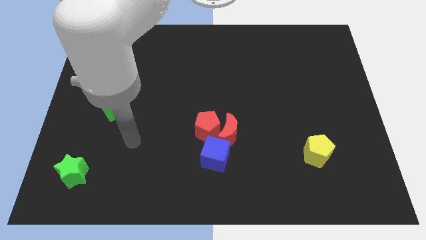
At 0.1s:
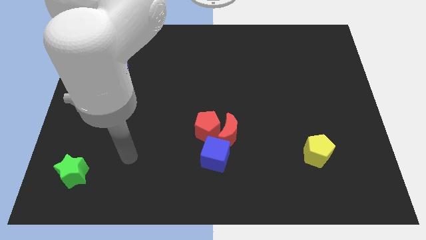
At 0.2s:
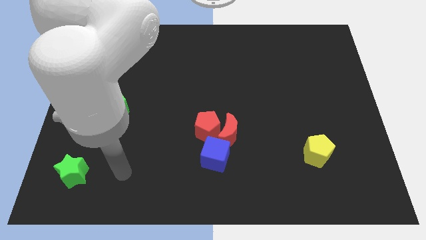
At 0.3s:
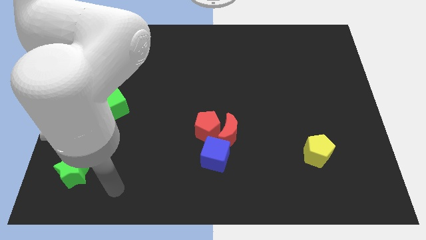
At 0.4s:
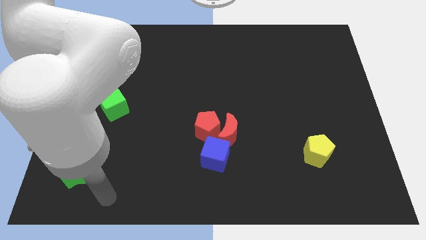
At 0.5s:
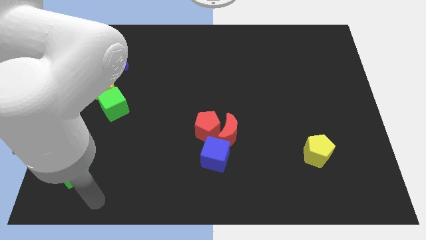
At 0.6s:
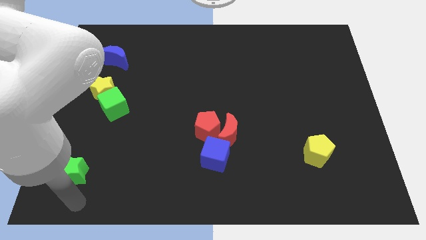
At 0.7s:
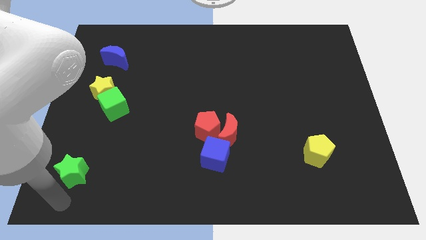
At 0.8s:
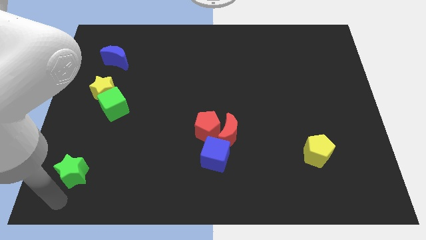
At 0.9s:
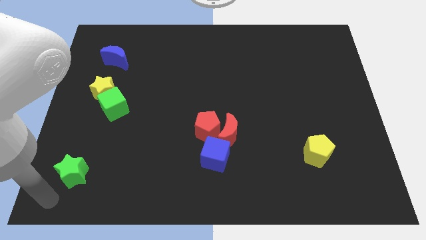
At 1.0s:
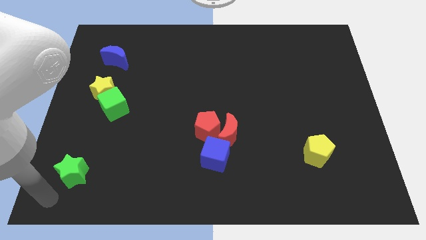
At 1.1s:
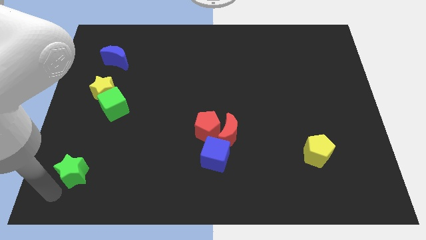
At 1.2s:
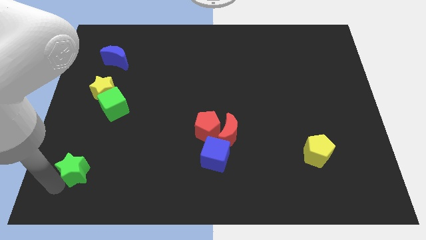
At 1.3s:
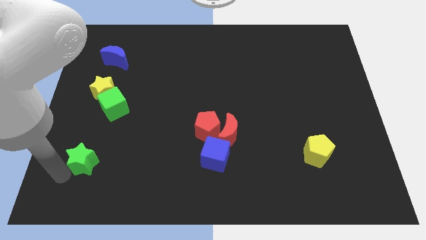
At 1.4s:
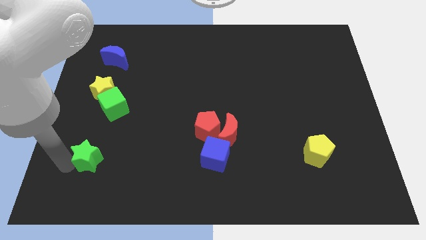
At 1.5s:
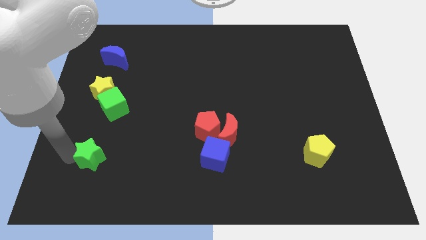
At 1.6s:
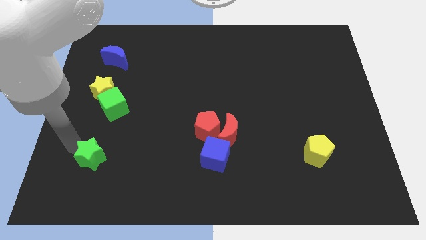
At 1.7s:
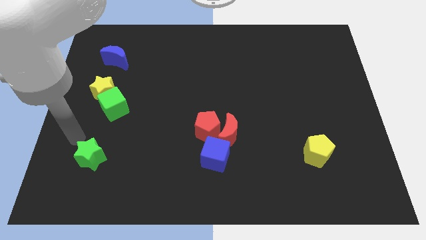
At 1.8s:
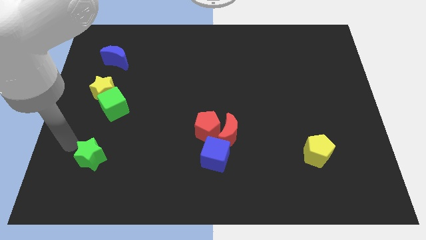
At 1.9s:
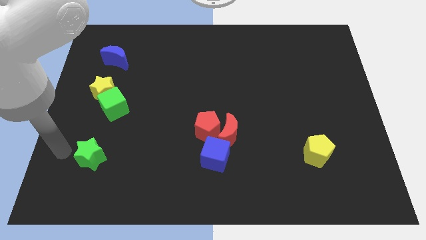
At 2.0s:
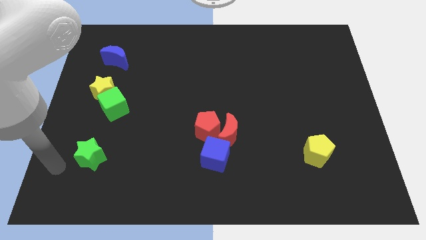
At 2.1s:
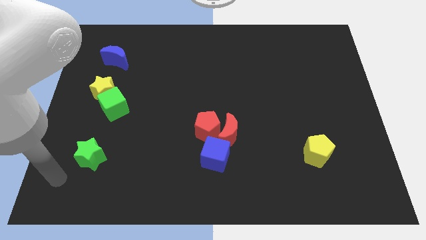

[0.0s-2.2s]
move the green star slightly to the upwards

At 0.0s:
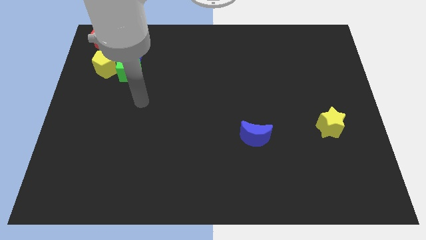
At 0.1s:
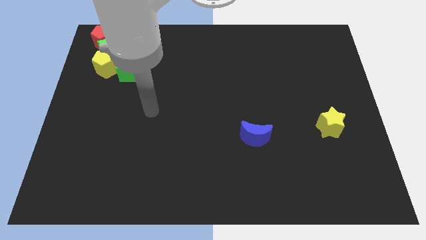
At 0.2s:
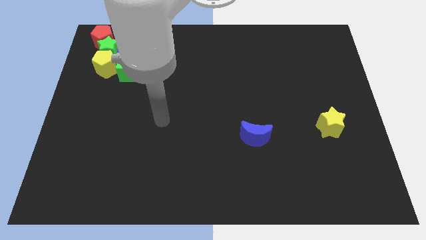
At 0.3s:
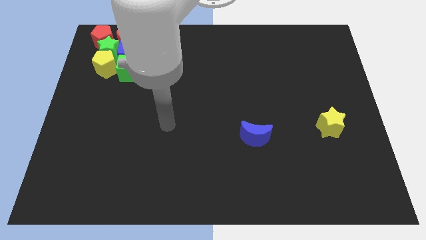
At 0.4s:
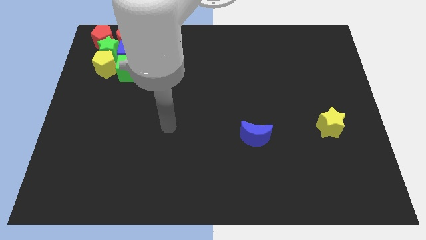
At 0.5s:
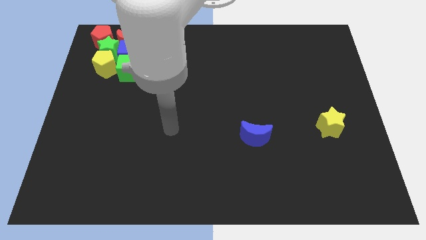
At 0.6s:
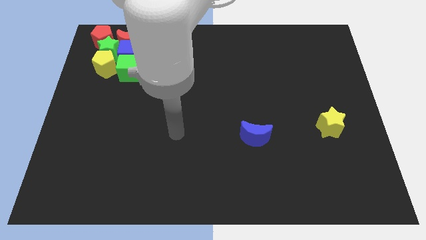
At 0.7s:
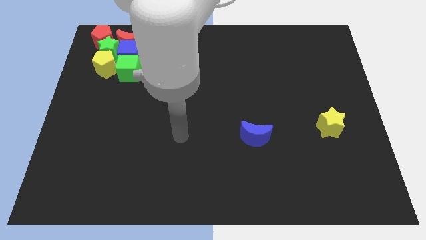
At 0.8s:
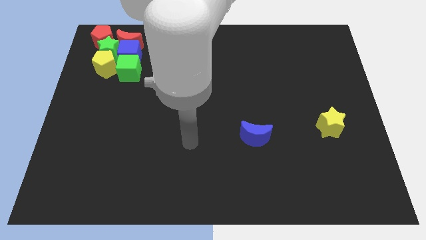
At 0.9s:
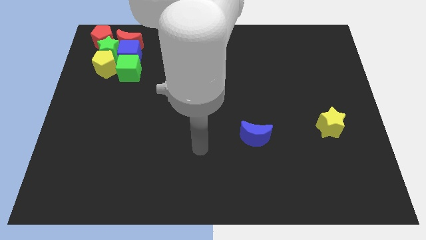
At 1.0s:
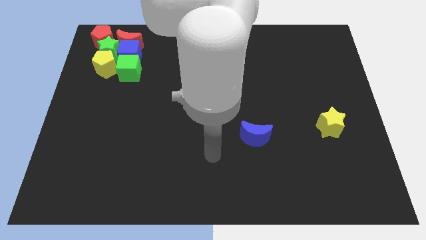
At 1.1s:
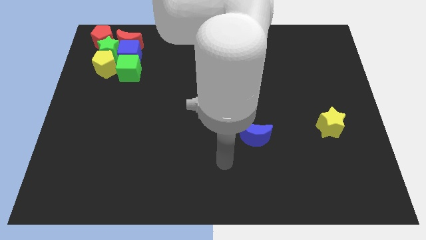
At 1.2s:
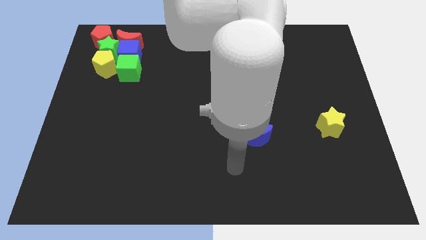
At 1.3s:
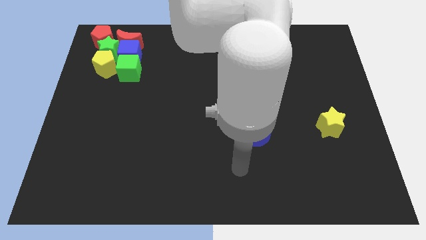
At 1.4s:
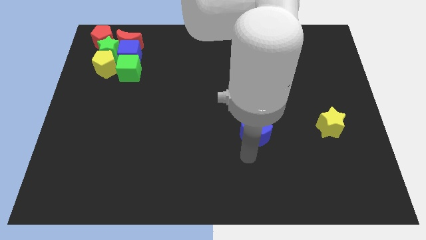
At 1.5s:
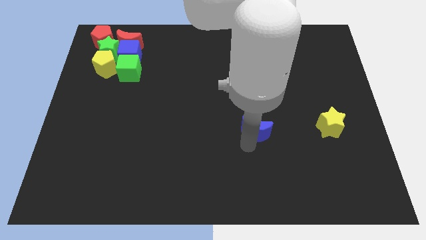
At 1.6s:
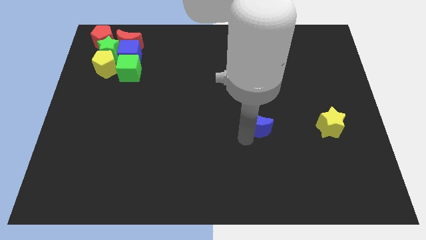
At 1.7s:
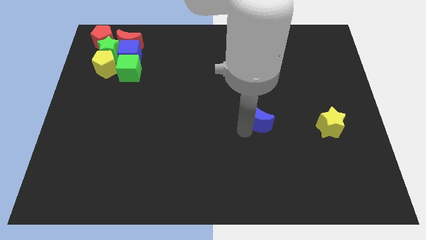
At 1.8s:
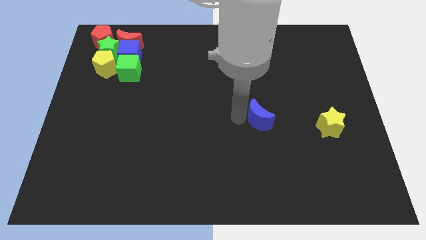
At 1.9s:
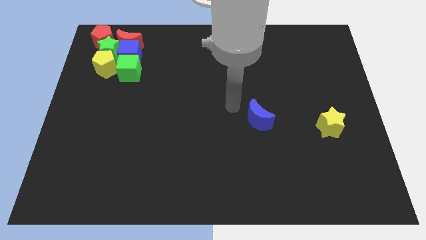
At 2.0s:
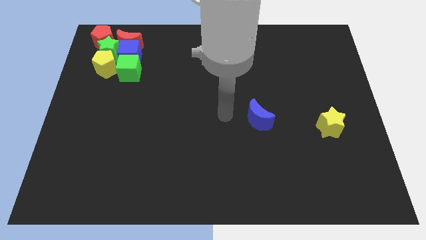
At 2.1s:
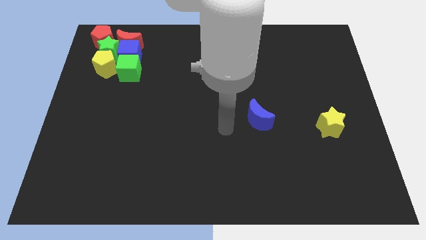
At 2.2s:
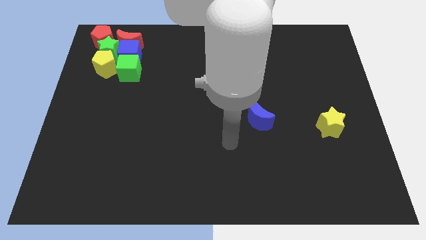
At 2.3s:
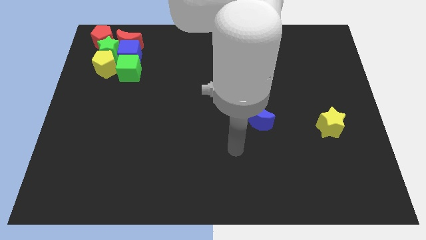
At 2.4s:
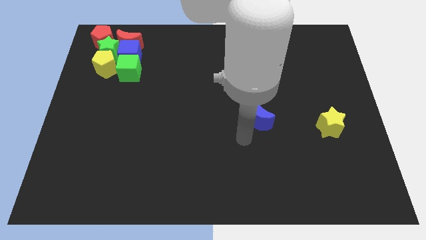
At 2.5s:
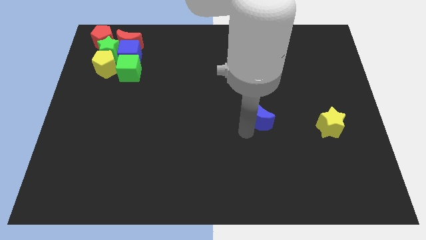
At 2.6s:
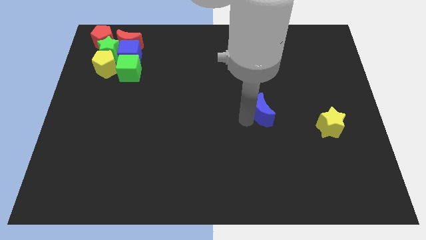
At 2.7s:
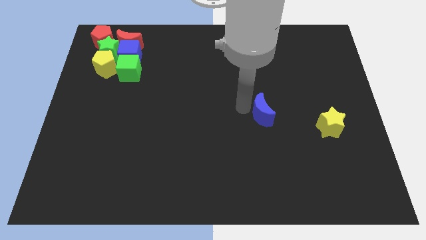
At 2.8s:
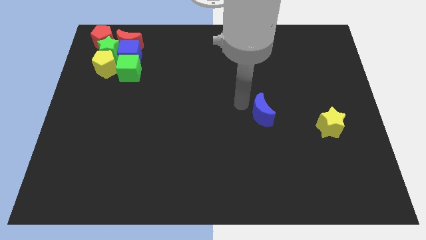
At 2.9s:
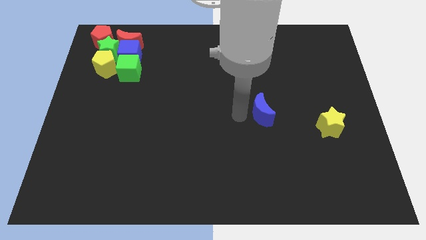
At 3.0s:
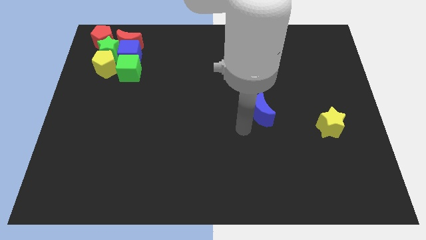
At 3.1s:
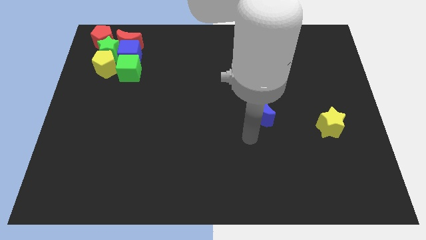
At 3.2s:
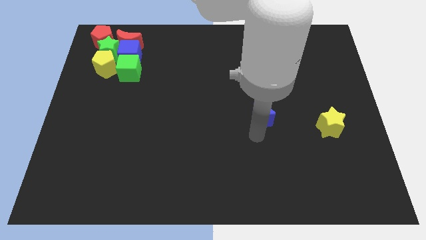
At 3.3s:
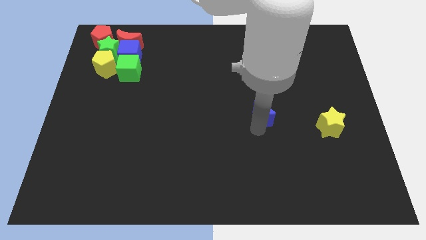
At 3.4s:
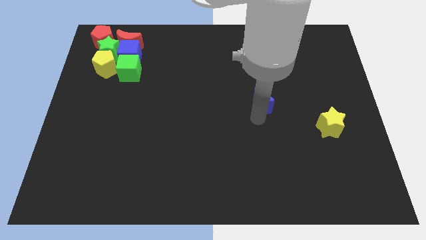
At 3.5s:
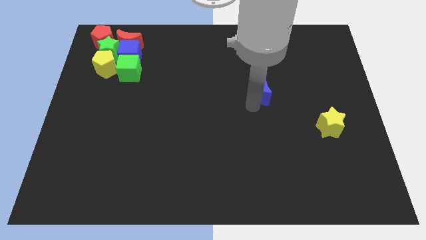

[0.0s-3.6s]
move the blue crescent upwards

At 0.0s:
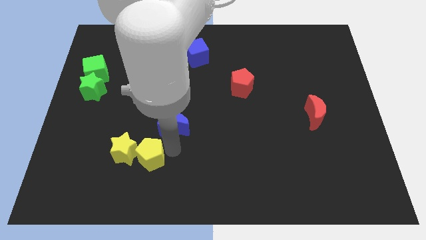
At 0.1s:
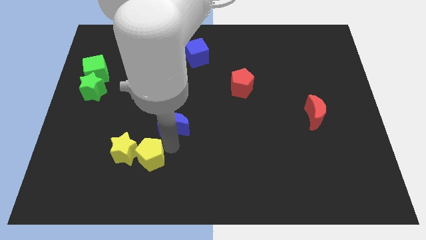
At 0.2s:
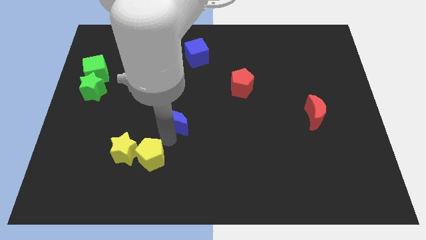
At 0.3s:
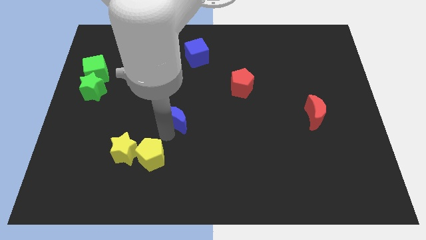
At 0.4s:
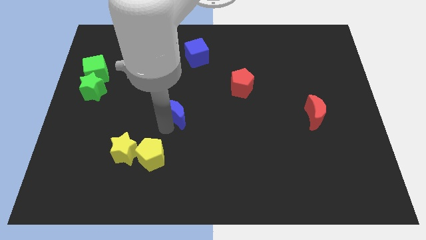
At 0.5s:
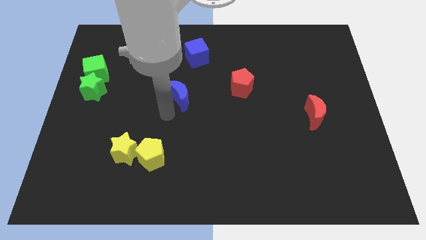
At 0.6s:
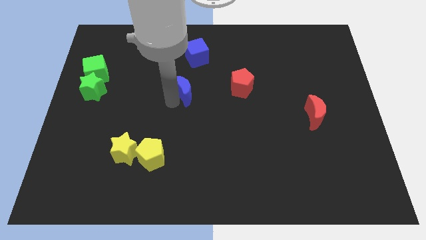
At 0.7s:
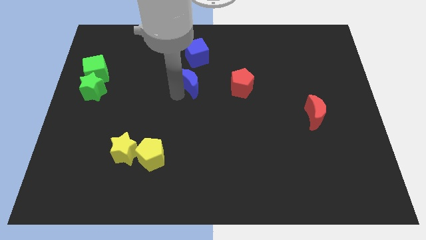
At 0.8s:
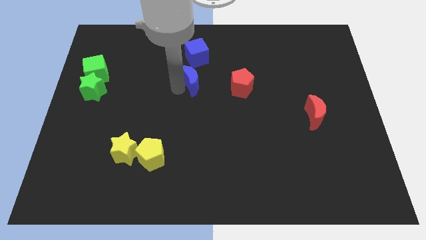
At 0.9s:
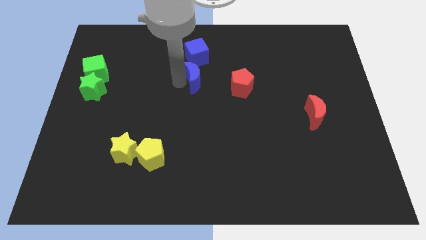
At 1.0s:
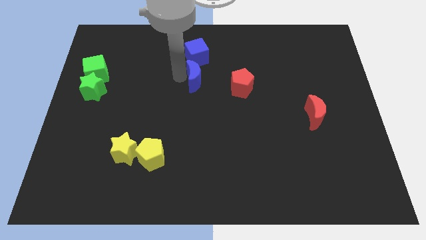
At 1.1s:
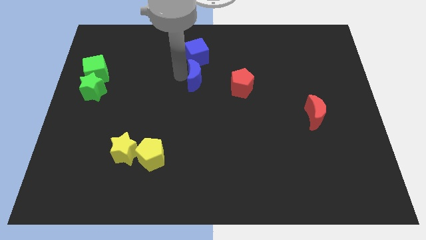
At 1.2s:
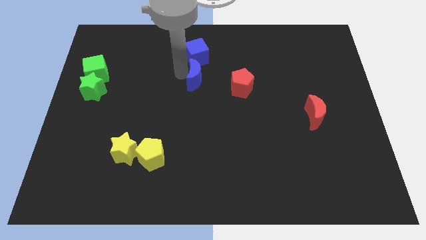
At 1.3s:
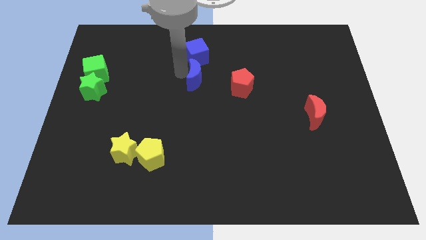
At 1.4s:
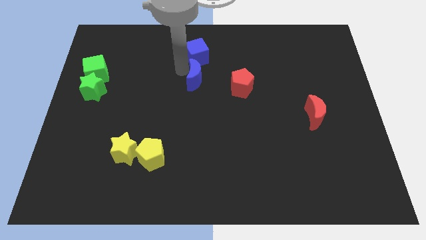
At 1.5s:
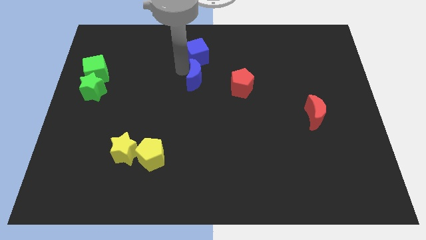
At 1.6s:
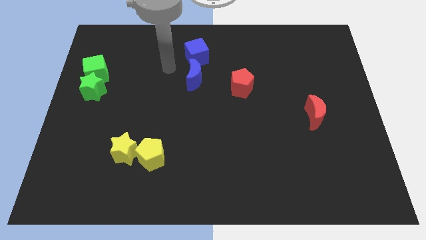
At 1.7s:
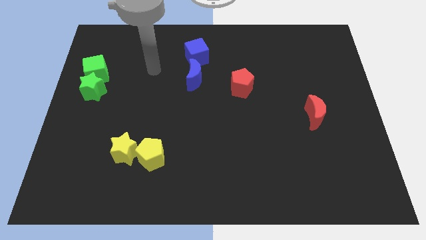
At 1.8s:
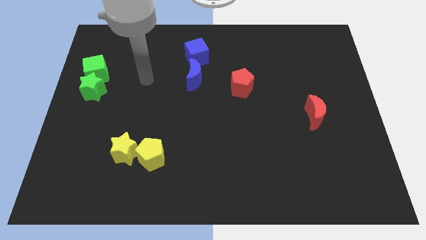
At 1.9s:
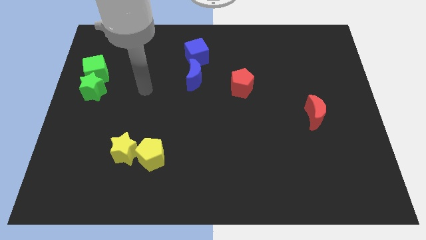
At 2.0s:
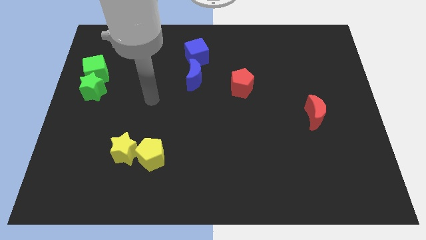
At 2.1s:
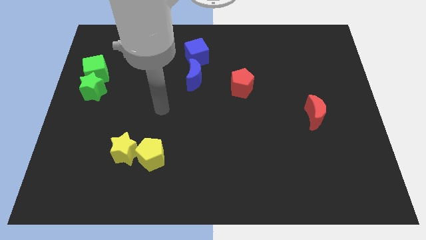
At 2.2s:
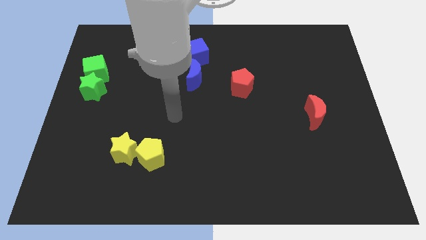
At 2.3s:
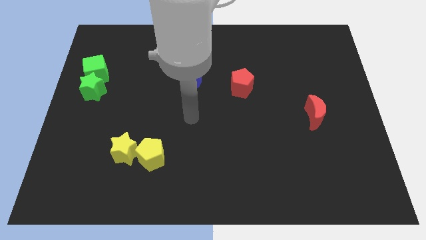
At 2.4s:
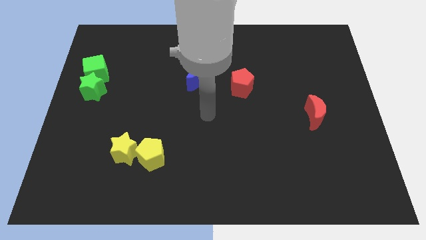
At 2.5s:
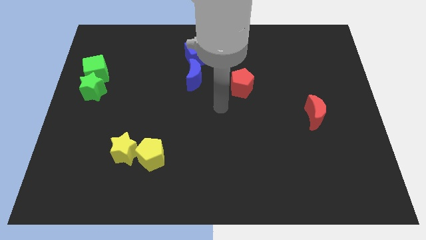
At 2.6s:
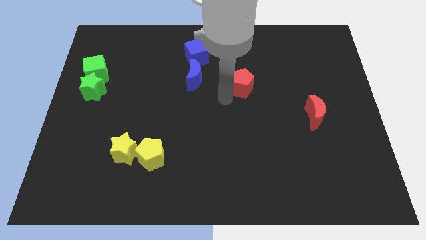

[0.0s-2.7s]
push the blue crescent to the bottom of the blue cube

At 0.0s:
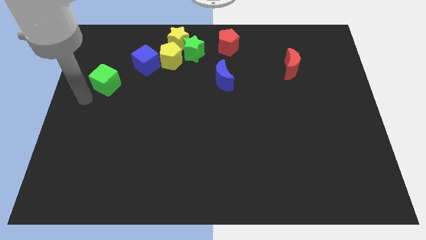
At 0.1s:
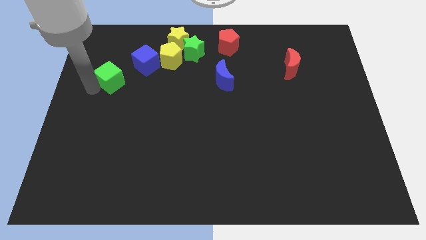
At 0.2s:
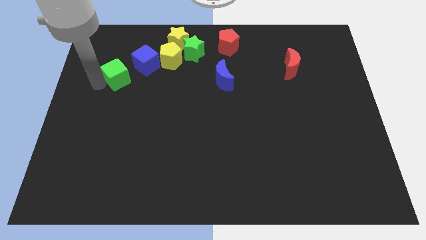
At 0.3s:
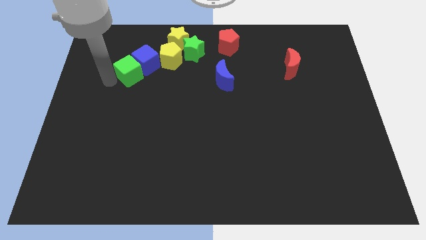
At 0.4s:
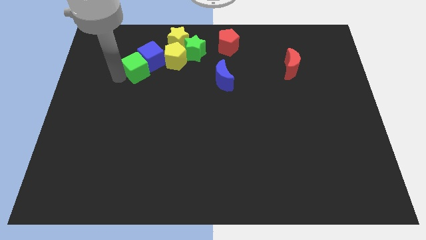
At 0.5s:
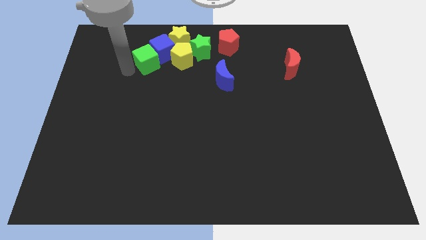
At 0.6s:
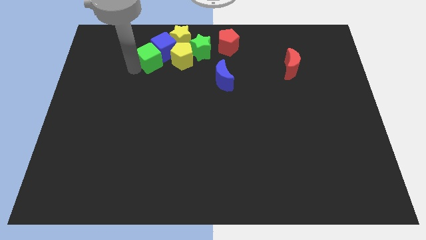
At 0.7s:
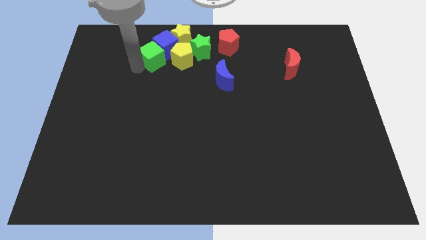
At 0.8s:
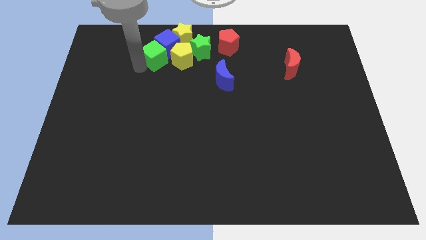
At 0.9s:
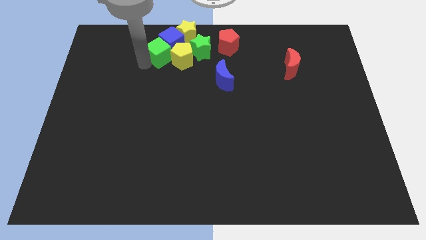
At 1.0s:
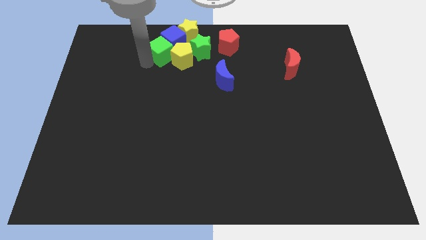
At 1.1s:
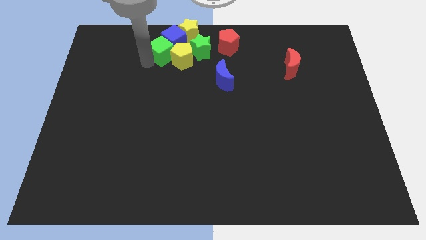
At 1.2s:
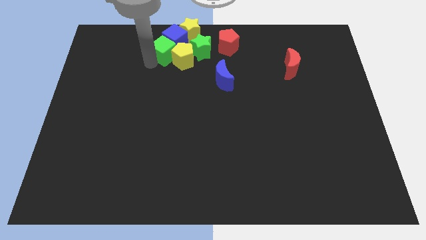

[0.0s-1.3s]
put the green cube into the blue cube
